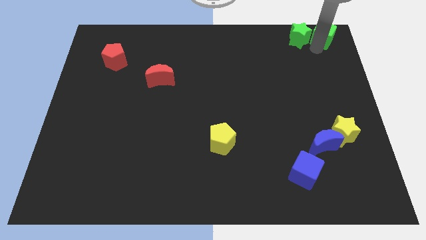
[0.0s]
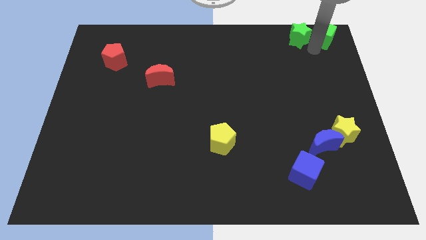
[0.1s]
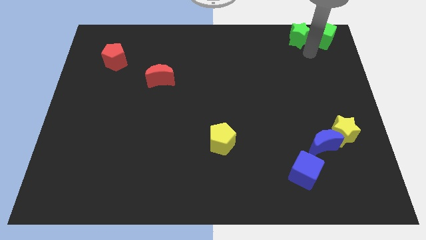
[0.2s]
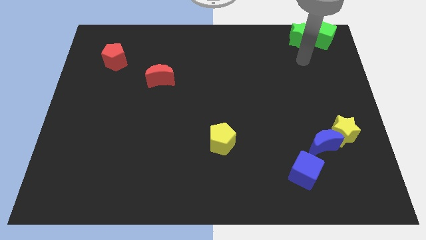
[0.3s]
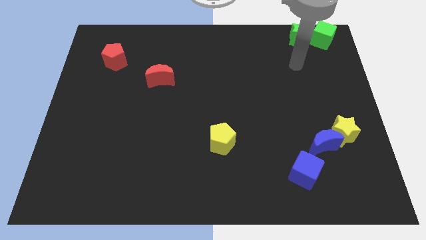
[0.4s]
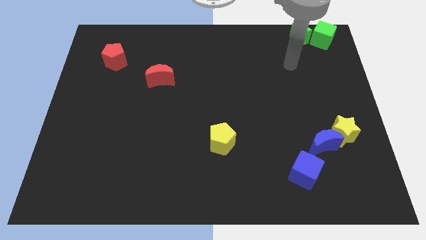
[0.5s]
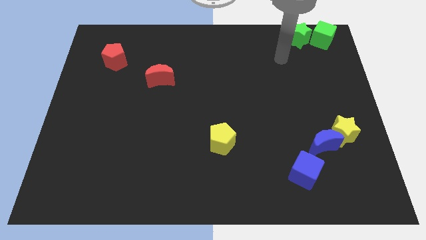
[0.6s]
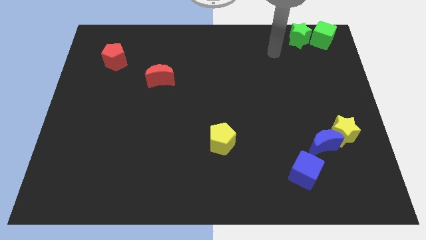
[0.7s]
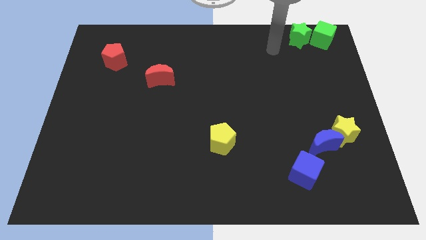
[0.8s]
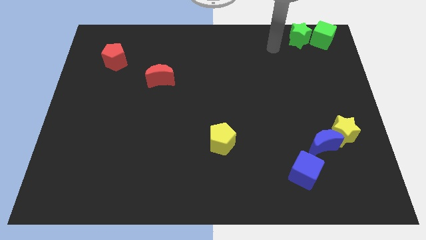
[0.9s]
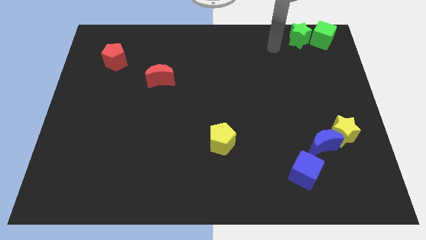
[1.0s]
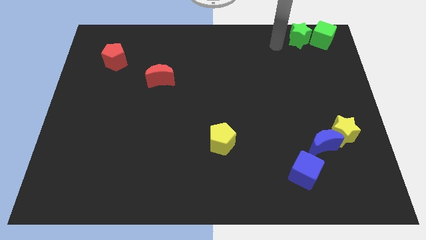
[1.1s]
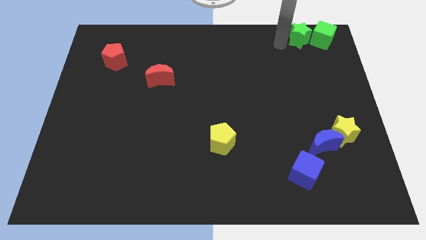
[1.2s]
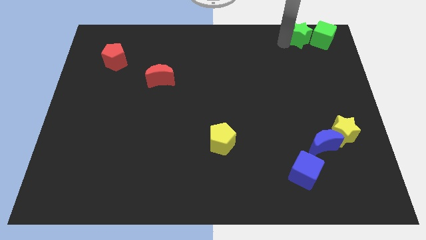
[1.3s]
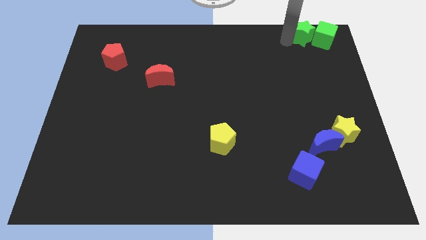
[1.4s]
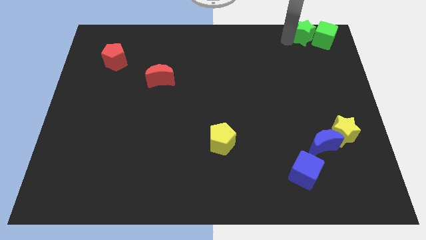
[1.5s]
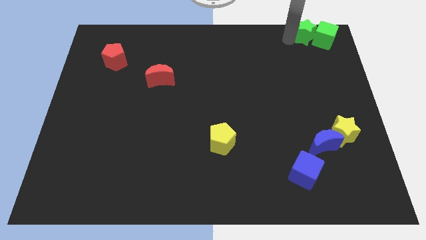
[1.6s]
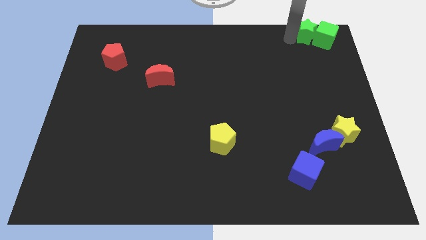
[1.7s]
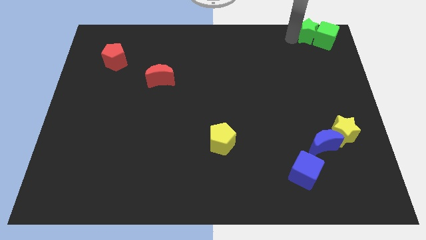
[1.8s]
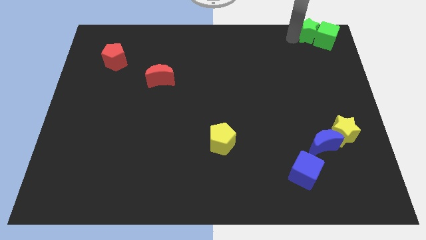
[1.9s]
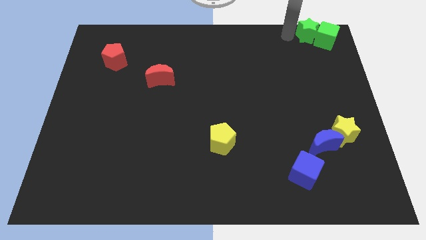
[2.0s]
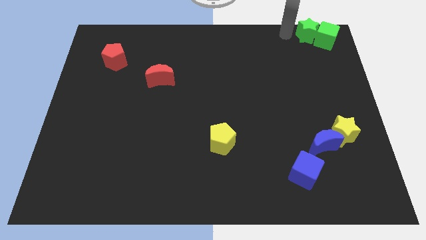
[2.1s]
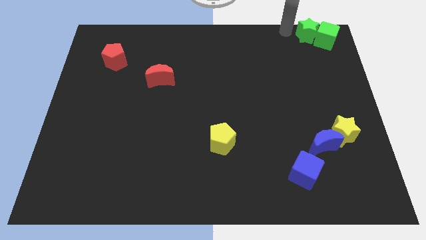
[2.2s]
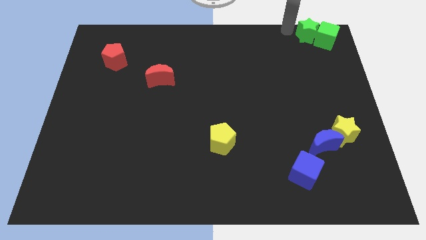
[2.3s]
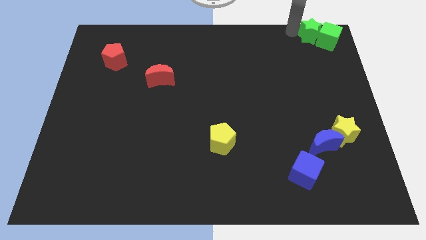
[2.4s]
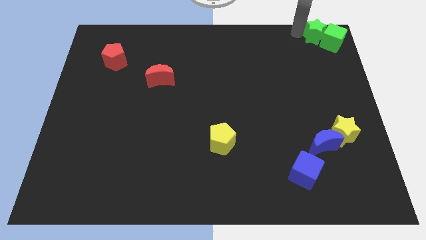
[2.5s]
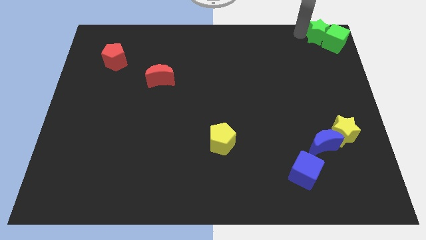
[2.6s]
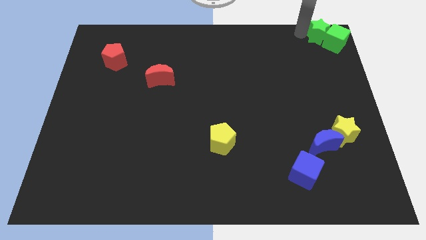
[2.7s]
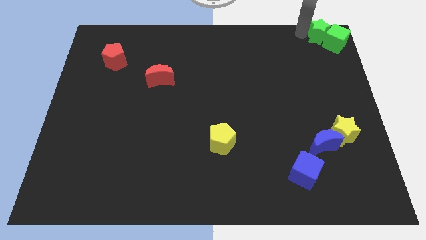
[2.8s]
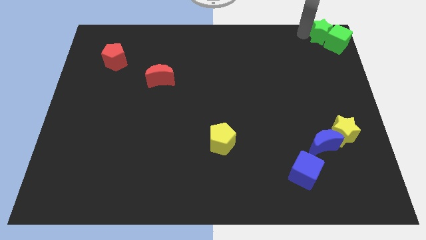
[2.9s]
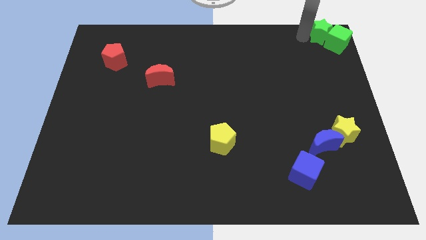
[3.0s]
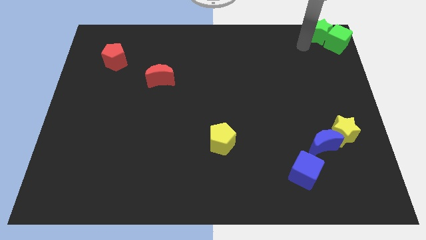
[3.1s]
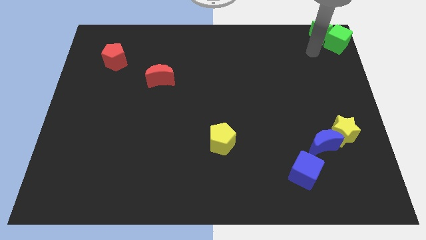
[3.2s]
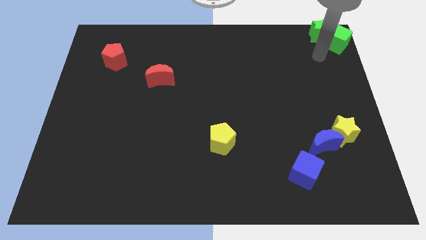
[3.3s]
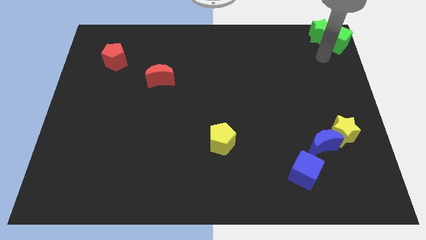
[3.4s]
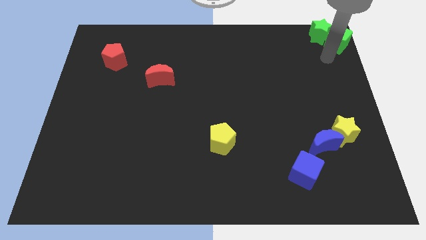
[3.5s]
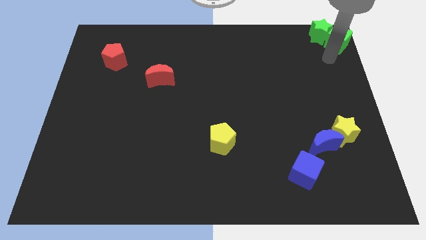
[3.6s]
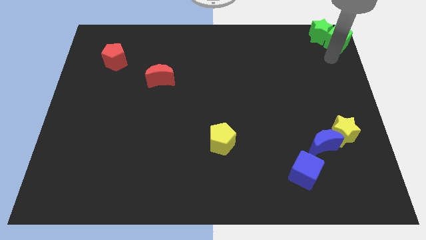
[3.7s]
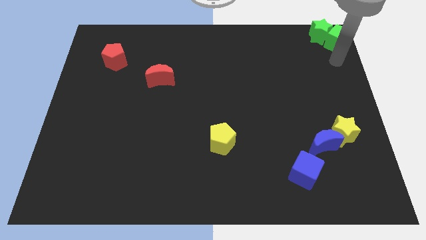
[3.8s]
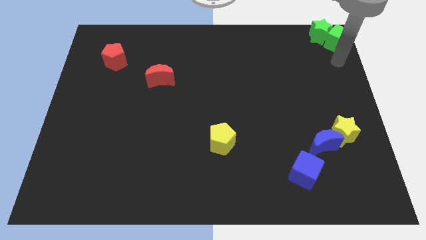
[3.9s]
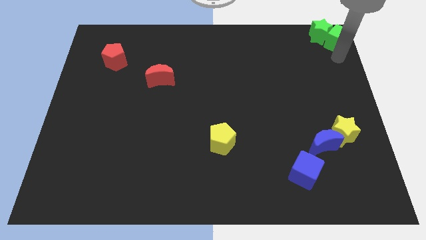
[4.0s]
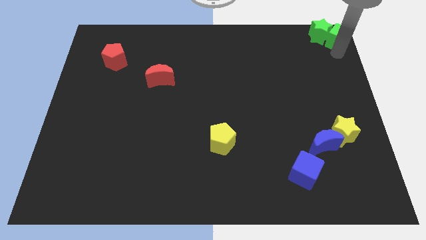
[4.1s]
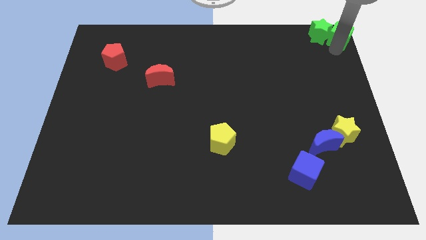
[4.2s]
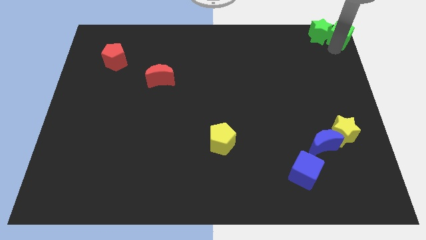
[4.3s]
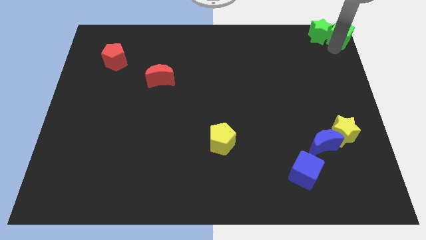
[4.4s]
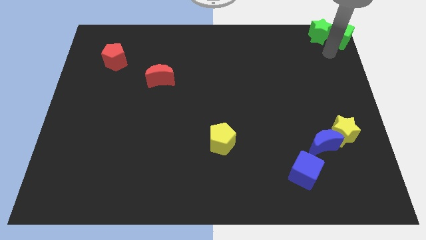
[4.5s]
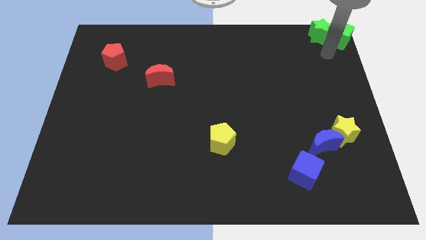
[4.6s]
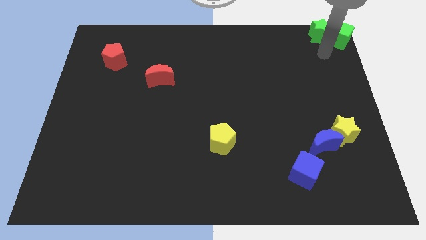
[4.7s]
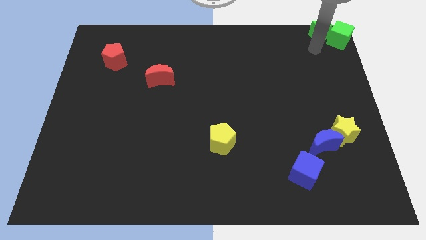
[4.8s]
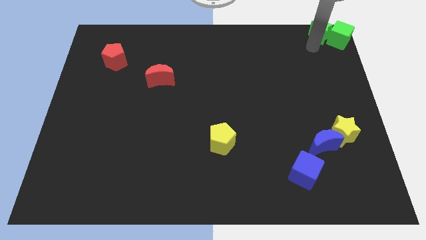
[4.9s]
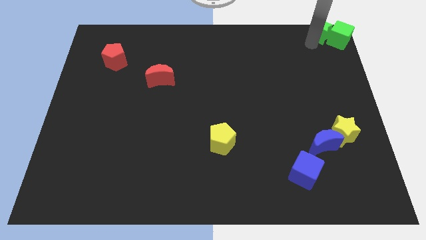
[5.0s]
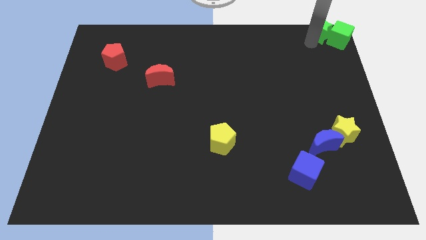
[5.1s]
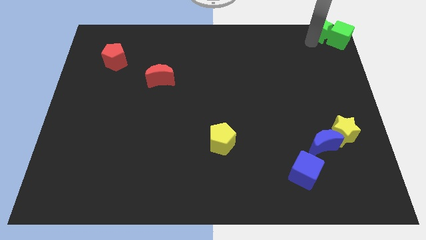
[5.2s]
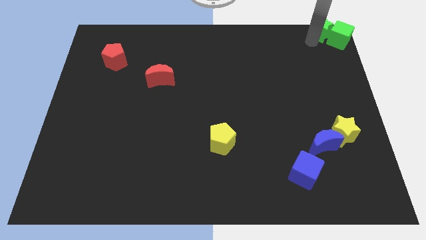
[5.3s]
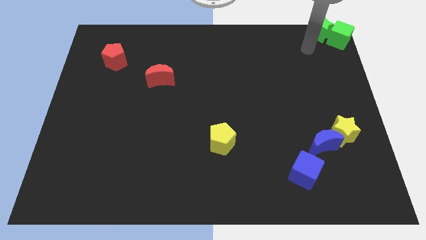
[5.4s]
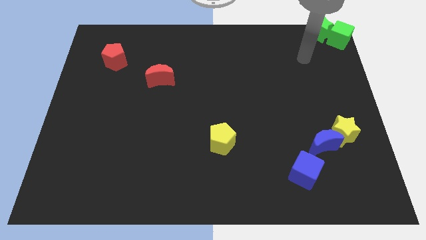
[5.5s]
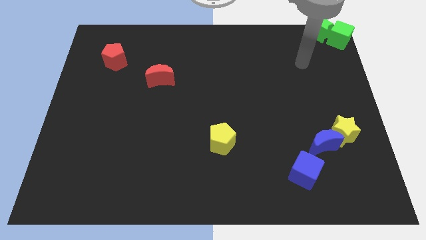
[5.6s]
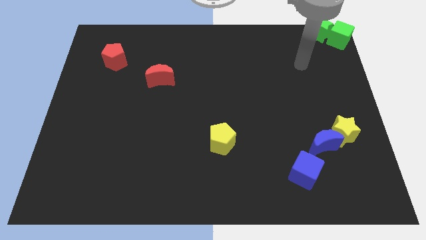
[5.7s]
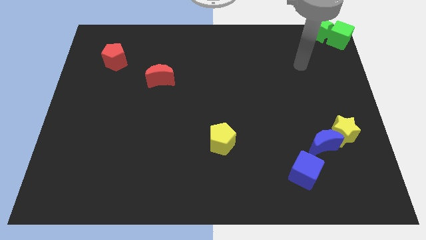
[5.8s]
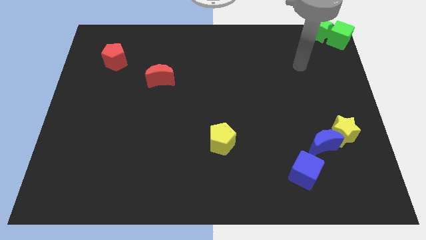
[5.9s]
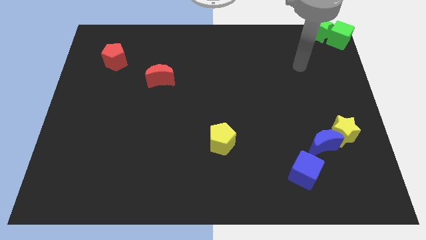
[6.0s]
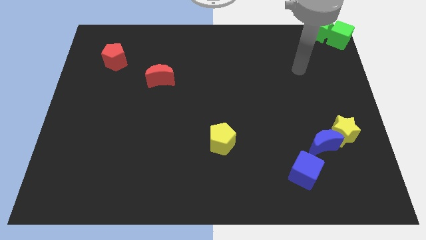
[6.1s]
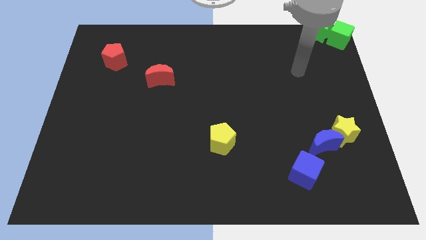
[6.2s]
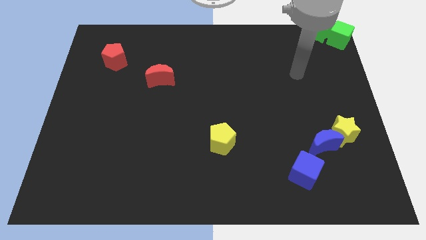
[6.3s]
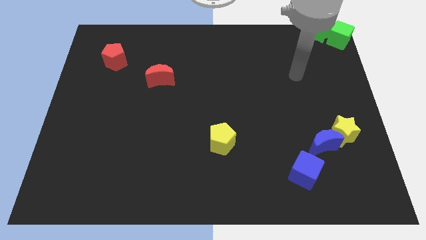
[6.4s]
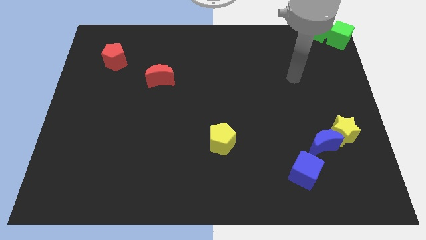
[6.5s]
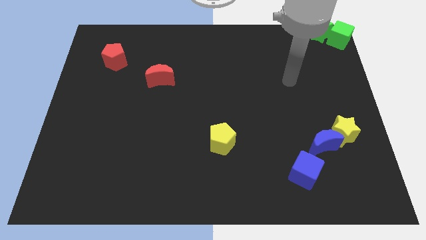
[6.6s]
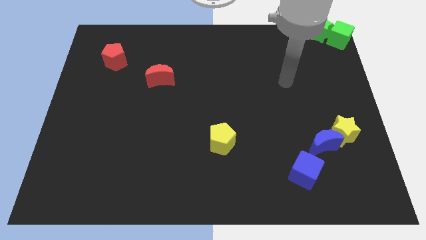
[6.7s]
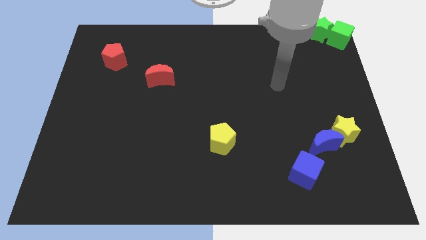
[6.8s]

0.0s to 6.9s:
push the green star into the green cube

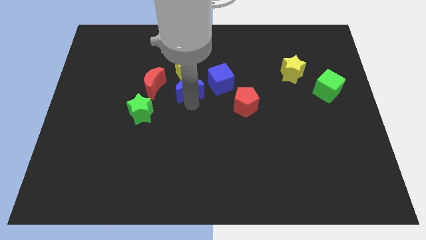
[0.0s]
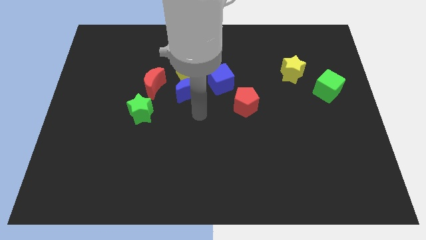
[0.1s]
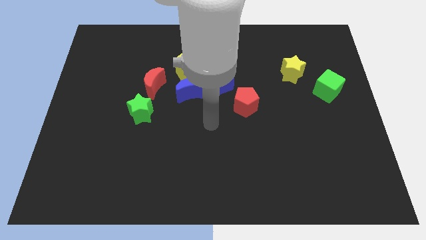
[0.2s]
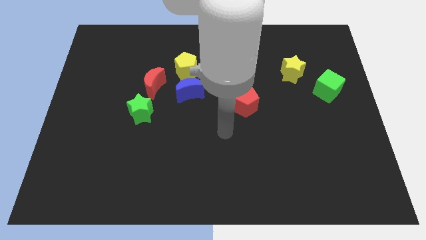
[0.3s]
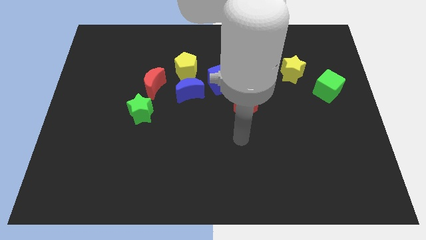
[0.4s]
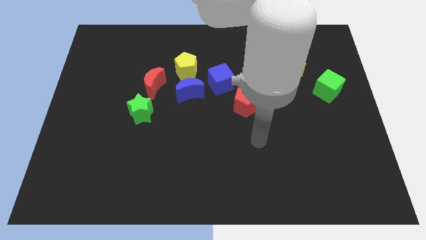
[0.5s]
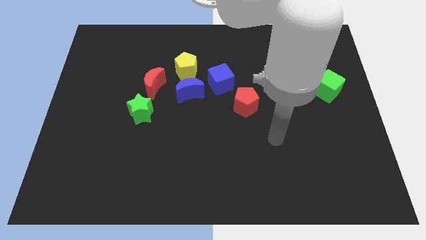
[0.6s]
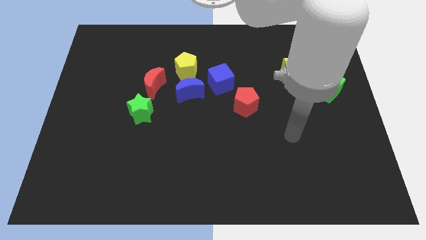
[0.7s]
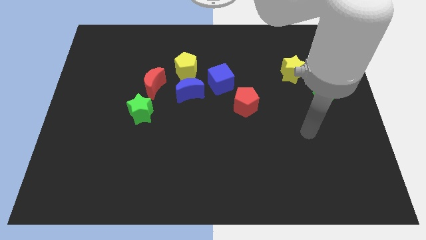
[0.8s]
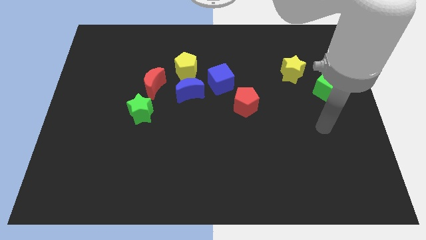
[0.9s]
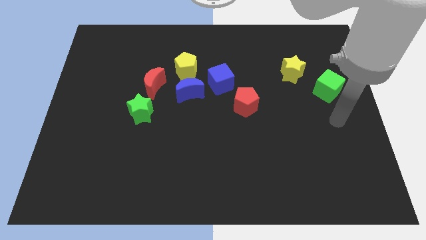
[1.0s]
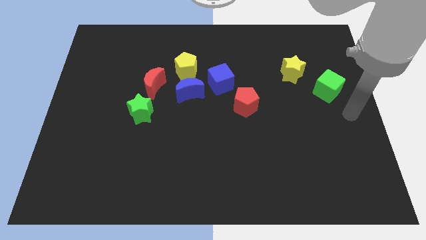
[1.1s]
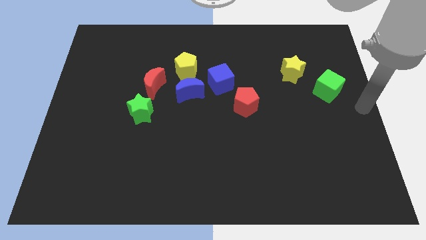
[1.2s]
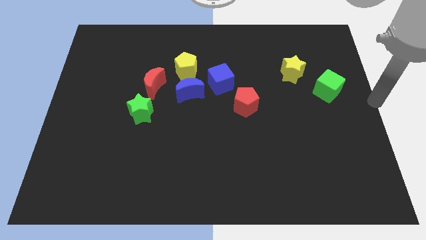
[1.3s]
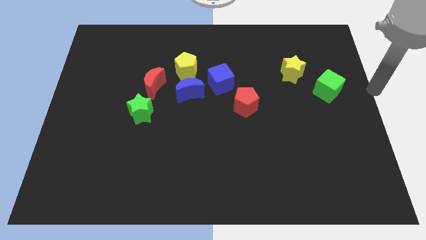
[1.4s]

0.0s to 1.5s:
point your arm at the center right of the board

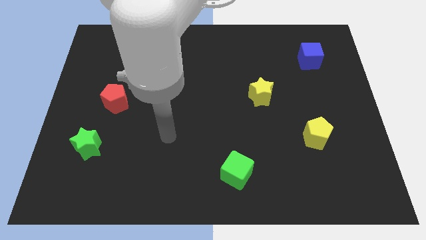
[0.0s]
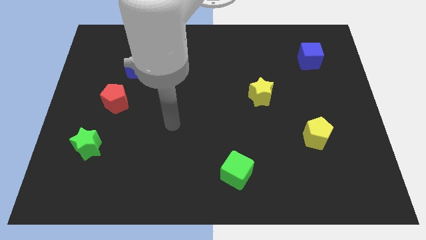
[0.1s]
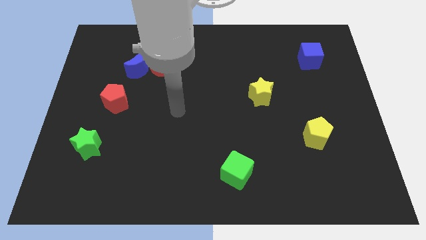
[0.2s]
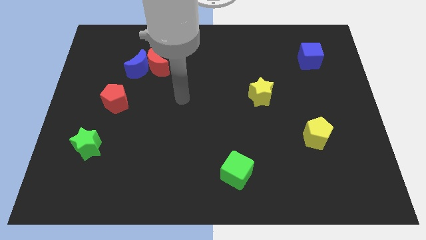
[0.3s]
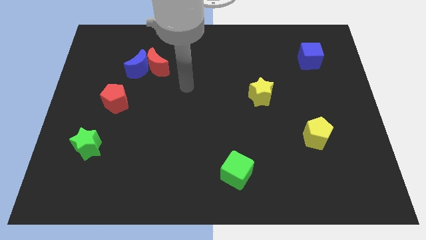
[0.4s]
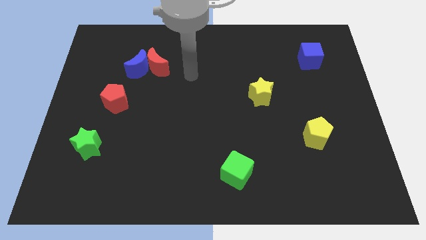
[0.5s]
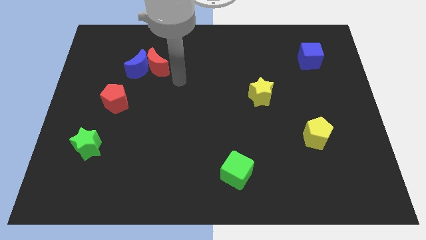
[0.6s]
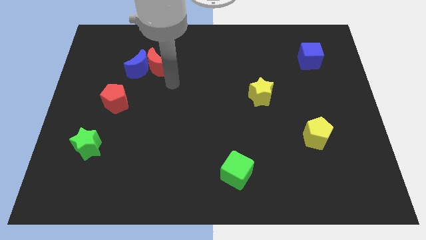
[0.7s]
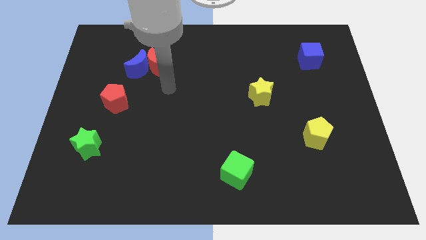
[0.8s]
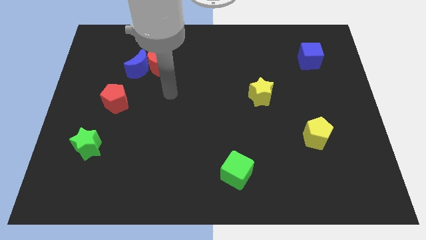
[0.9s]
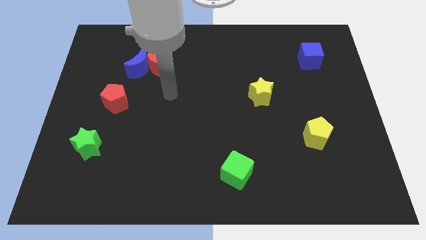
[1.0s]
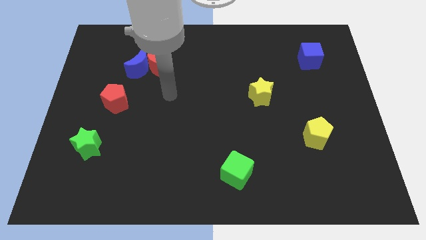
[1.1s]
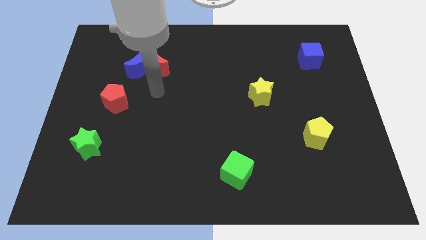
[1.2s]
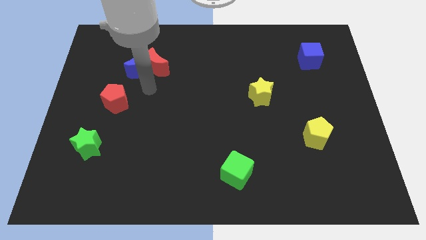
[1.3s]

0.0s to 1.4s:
point your arm at the bottom of the red crescent
